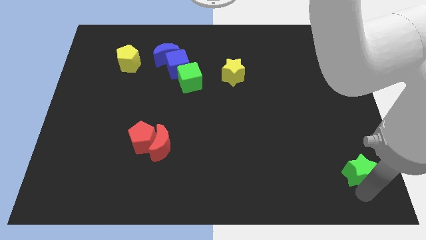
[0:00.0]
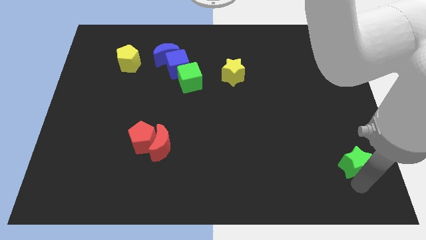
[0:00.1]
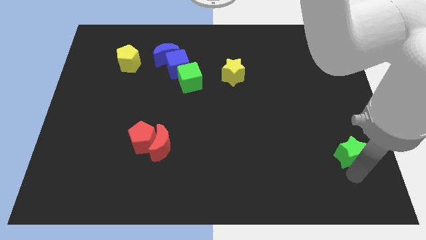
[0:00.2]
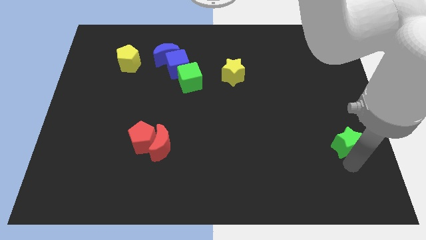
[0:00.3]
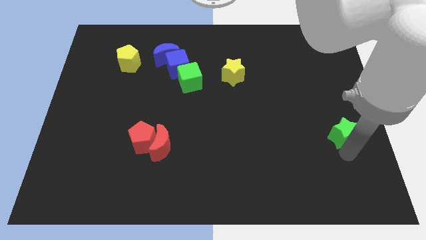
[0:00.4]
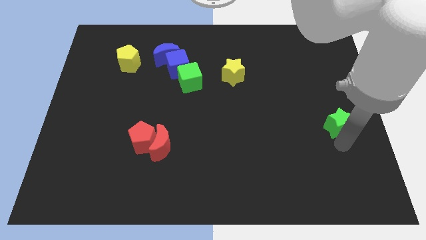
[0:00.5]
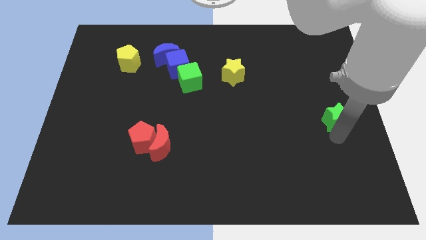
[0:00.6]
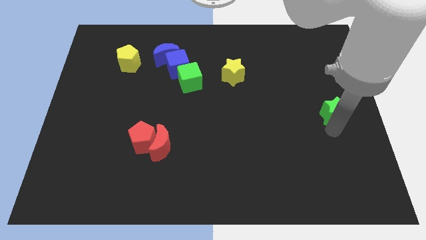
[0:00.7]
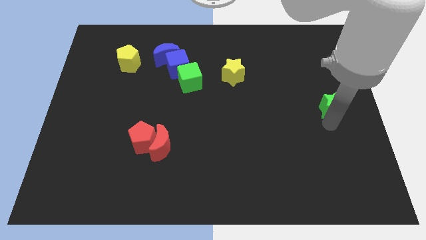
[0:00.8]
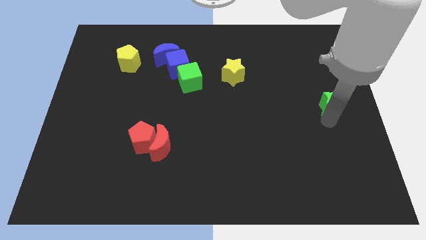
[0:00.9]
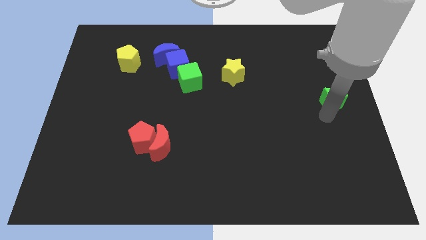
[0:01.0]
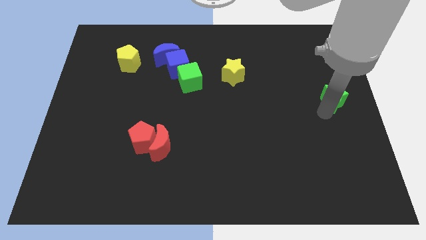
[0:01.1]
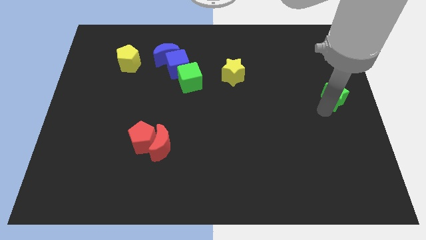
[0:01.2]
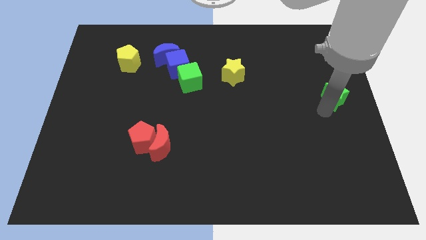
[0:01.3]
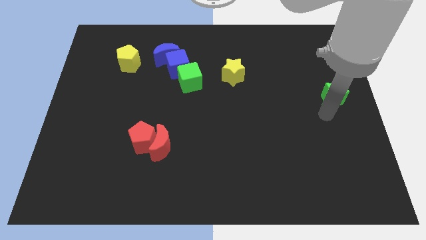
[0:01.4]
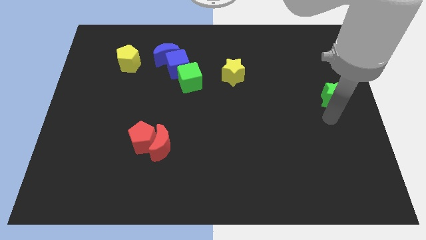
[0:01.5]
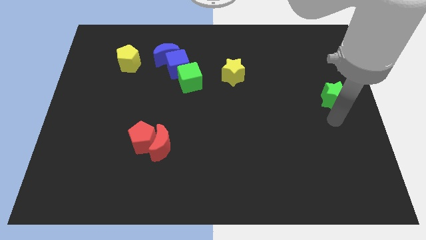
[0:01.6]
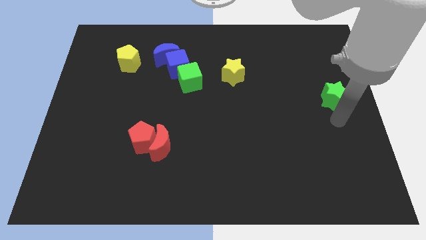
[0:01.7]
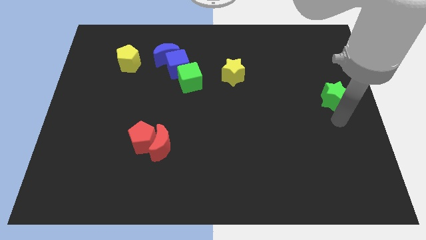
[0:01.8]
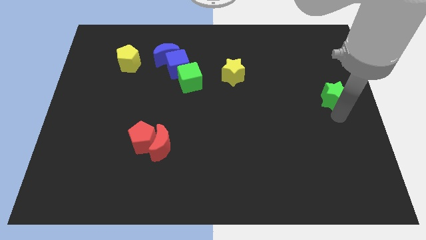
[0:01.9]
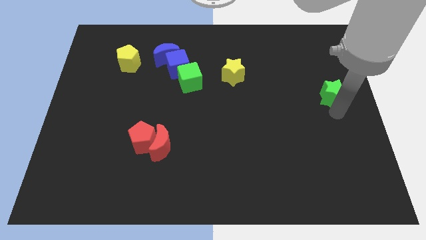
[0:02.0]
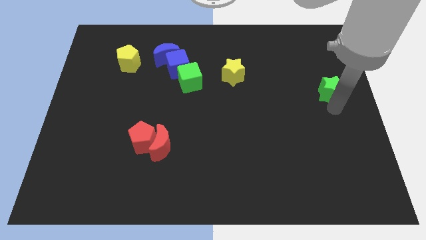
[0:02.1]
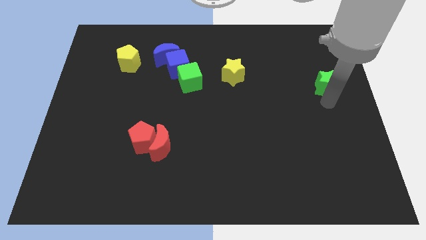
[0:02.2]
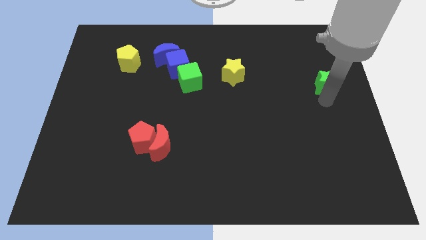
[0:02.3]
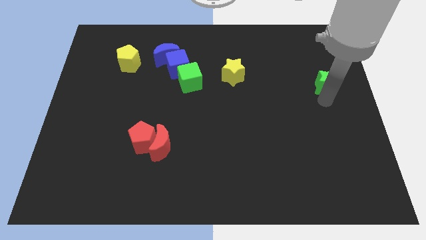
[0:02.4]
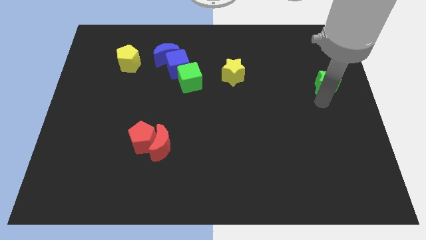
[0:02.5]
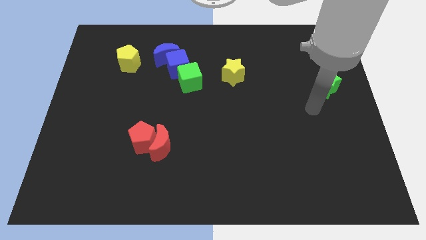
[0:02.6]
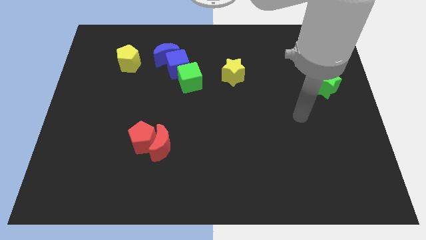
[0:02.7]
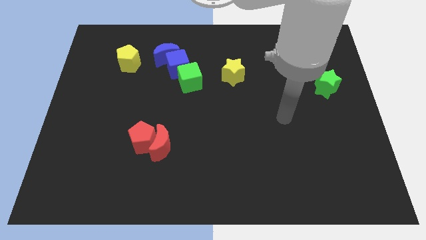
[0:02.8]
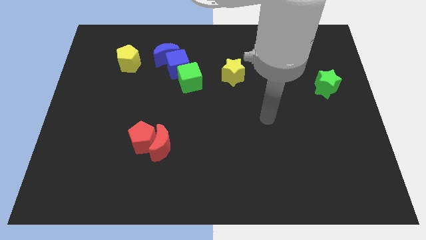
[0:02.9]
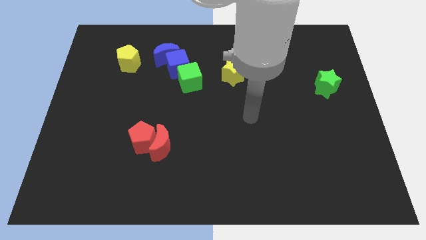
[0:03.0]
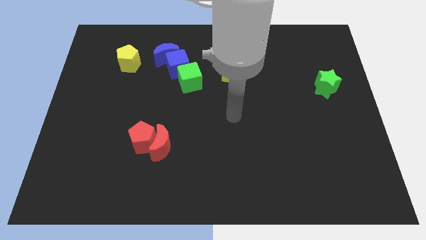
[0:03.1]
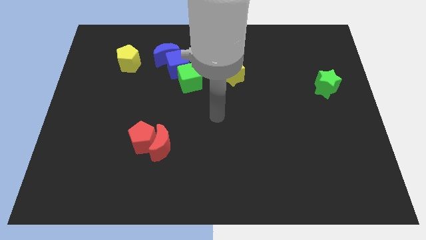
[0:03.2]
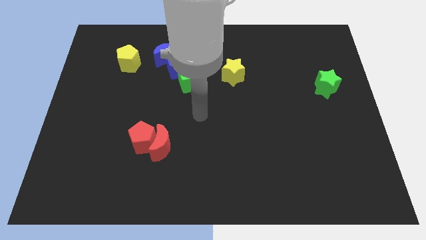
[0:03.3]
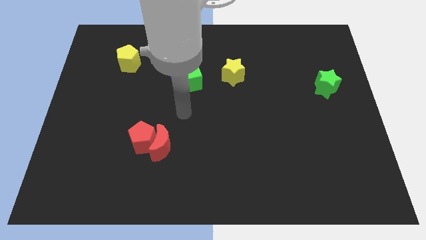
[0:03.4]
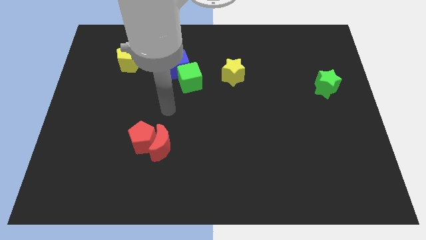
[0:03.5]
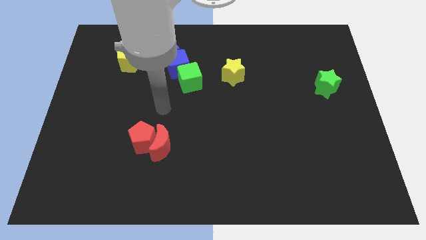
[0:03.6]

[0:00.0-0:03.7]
move the arm horizontally to the center side

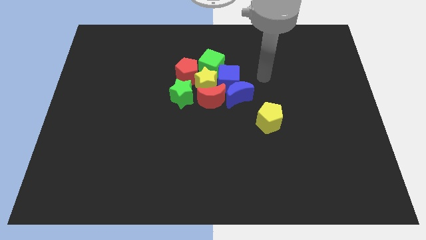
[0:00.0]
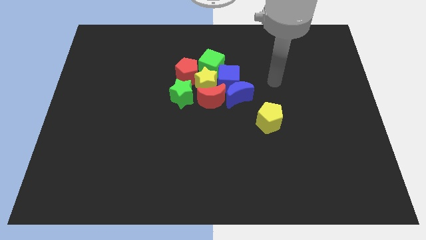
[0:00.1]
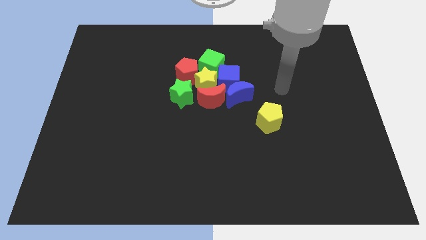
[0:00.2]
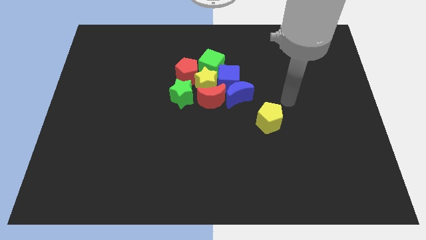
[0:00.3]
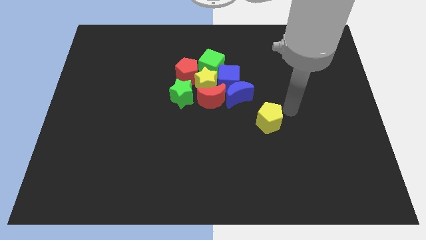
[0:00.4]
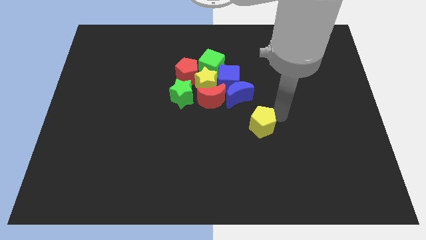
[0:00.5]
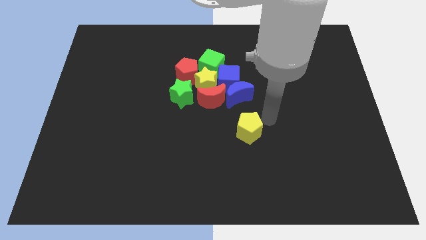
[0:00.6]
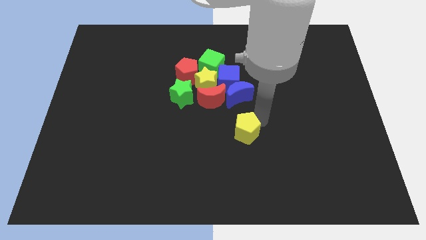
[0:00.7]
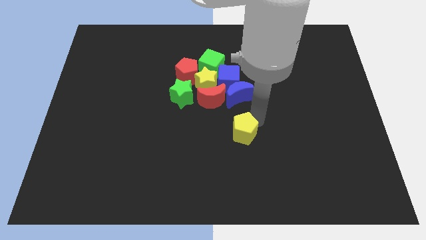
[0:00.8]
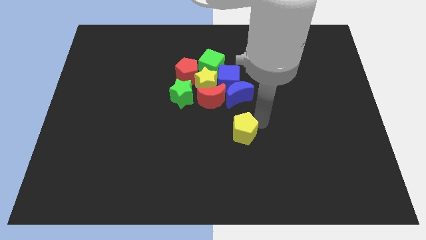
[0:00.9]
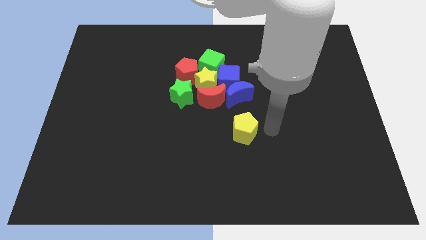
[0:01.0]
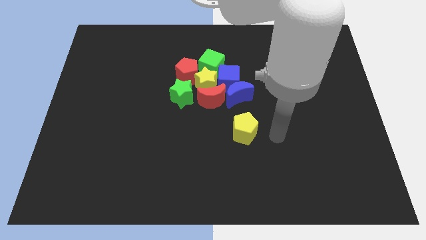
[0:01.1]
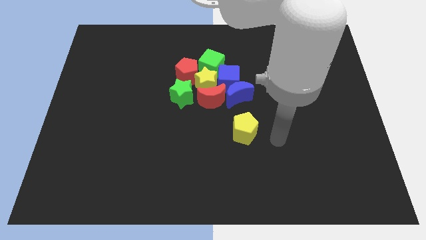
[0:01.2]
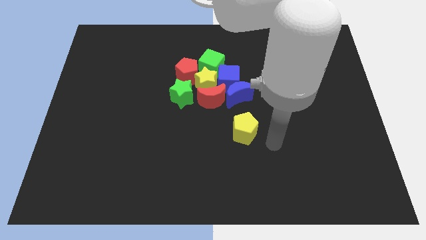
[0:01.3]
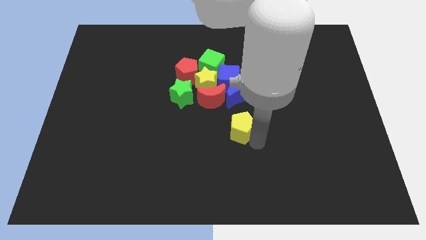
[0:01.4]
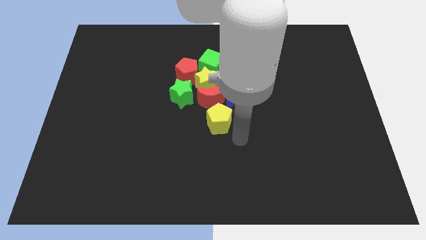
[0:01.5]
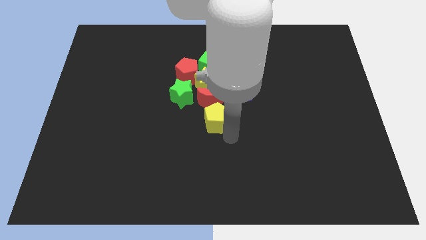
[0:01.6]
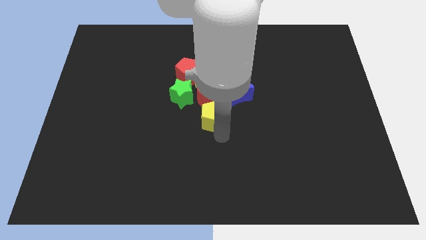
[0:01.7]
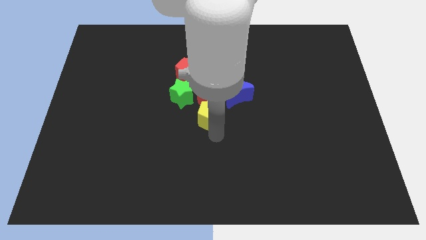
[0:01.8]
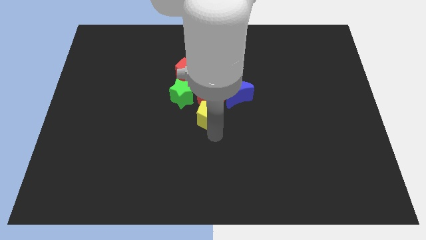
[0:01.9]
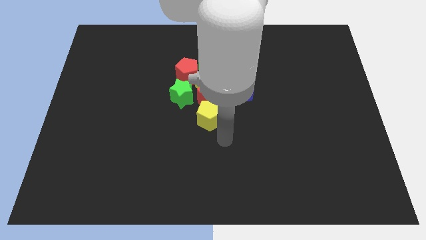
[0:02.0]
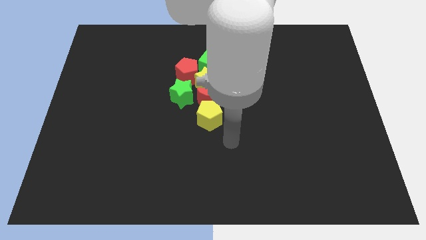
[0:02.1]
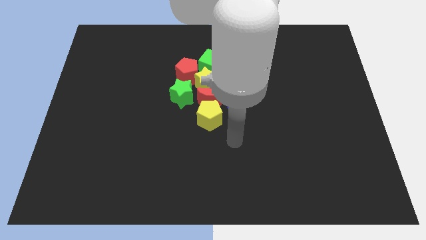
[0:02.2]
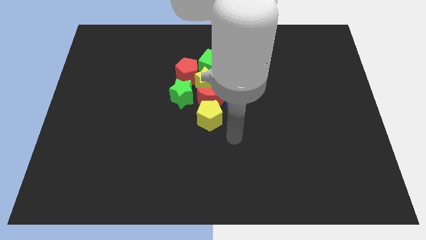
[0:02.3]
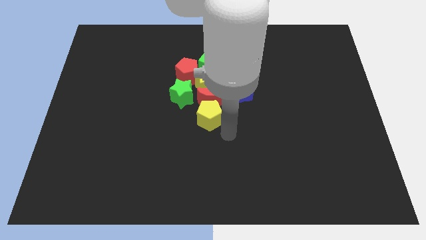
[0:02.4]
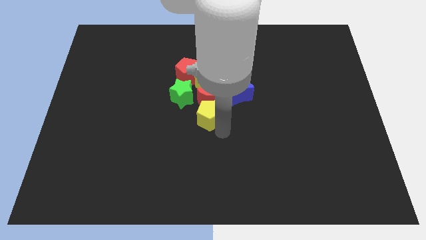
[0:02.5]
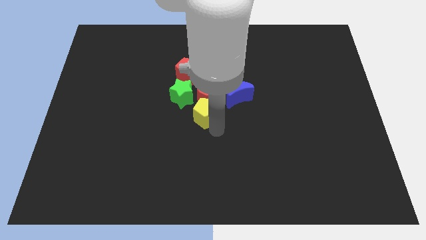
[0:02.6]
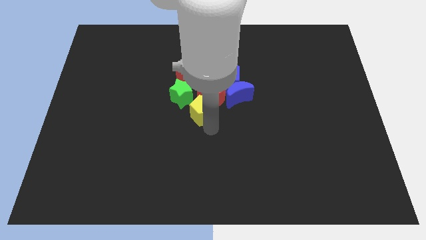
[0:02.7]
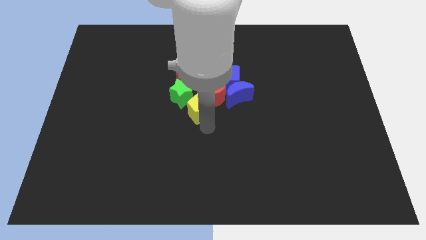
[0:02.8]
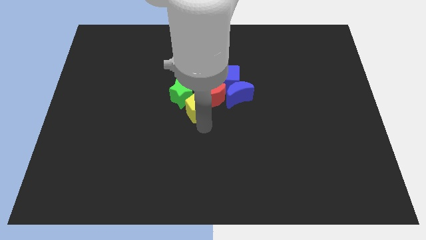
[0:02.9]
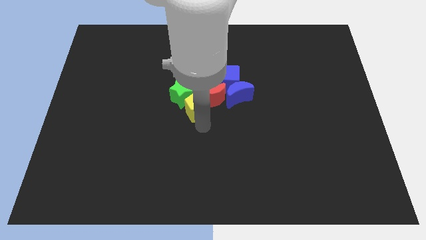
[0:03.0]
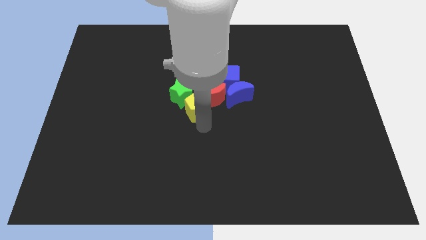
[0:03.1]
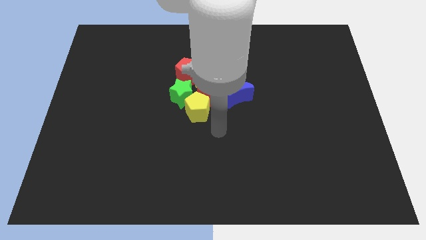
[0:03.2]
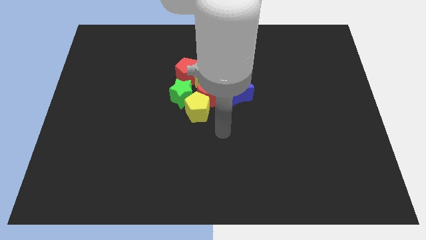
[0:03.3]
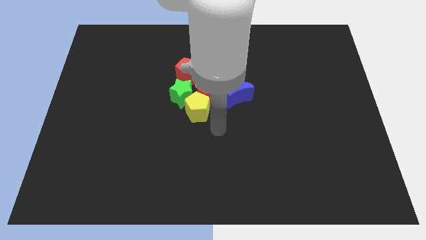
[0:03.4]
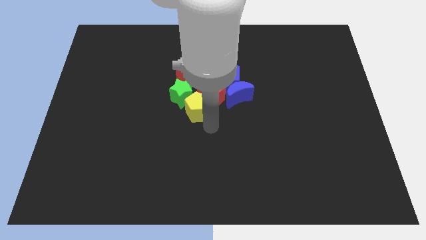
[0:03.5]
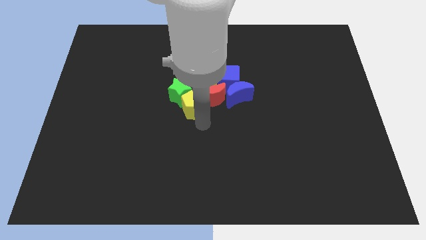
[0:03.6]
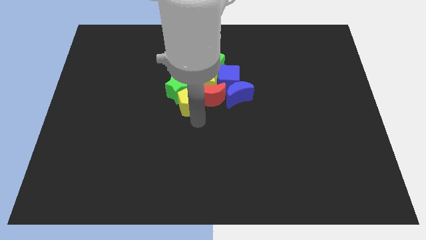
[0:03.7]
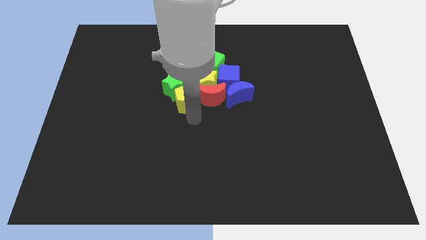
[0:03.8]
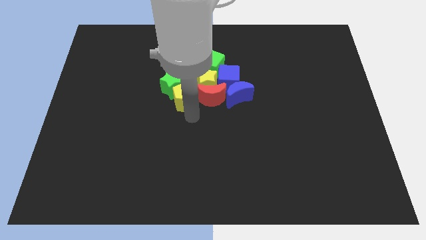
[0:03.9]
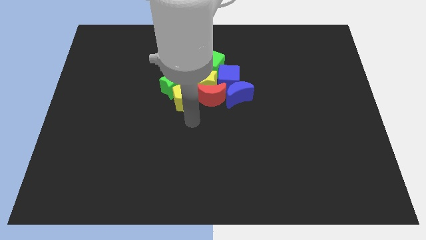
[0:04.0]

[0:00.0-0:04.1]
move yellow pentagon into green star

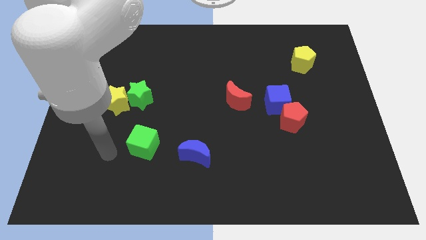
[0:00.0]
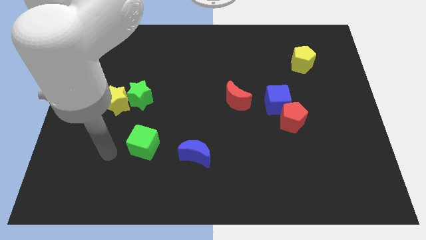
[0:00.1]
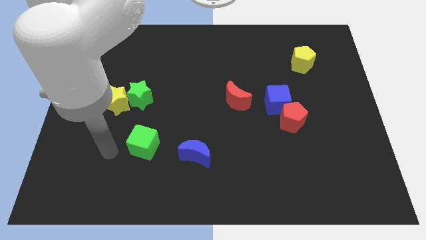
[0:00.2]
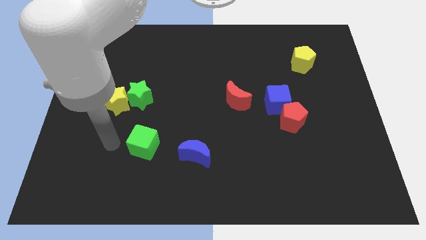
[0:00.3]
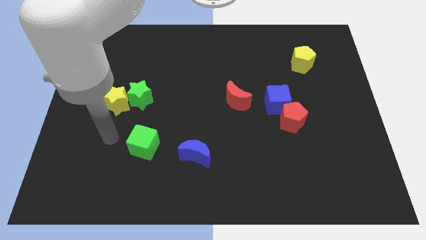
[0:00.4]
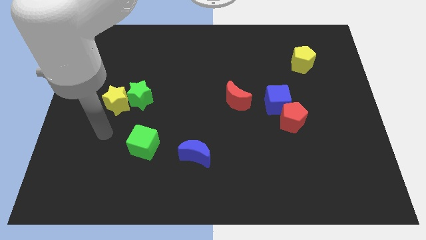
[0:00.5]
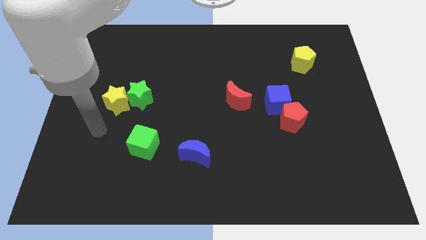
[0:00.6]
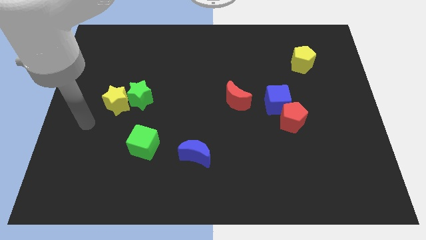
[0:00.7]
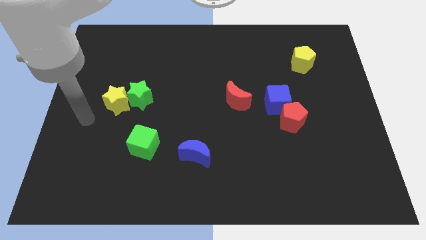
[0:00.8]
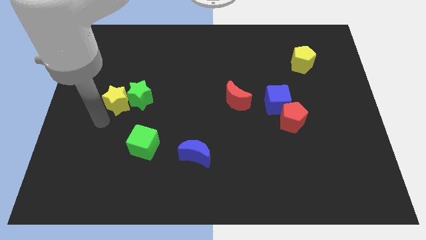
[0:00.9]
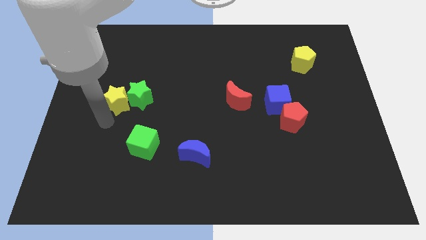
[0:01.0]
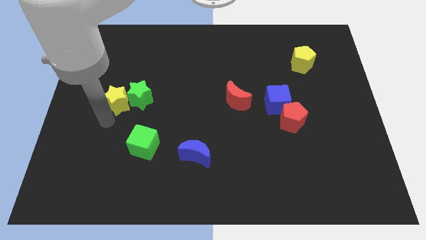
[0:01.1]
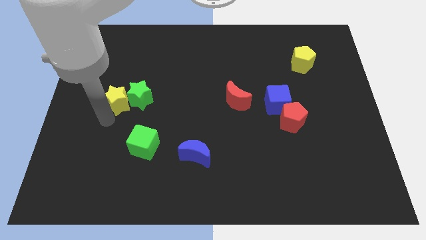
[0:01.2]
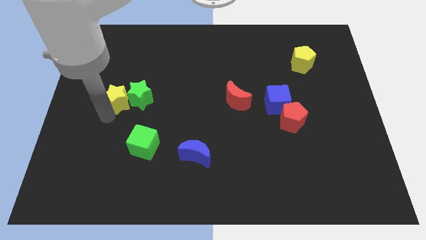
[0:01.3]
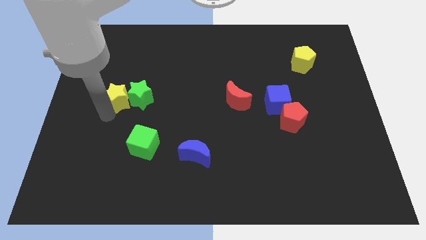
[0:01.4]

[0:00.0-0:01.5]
touch the bottom left of the yellow star
